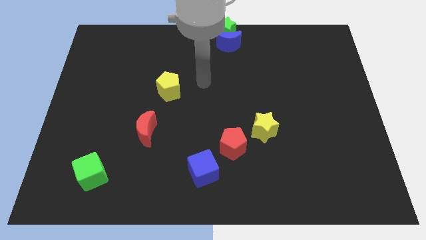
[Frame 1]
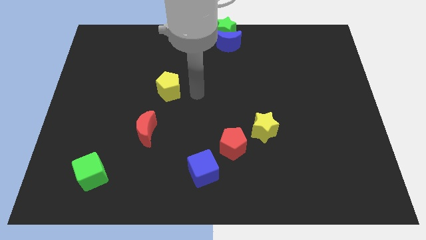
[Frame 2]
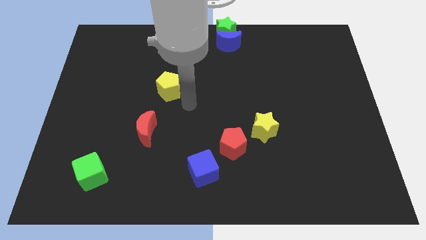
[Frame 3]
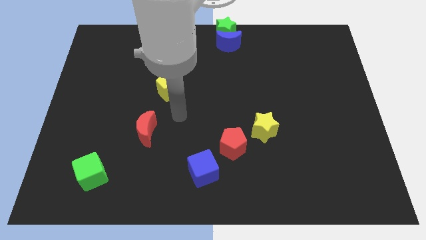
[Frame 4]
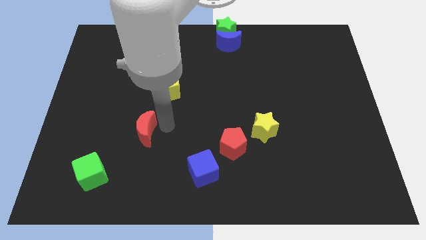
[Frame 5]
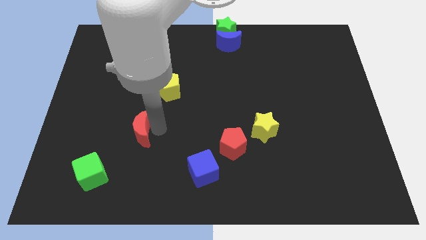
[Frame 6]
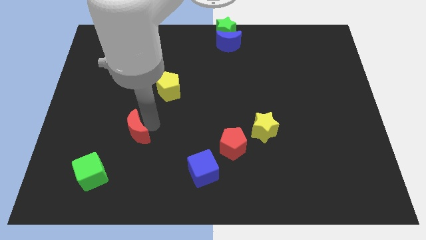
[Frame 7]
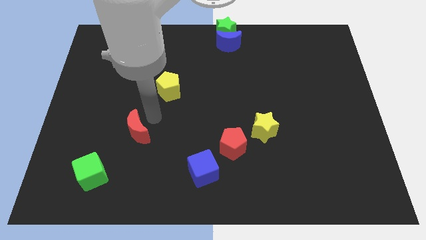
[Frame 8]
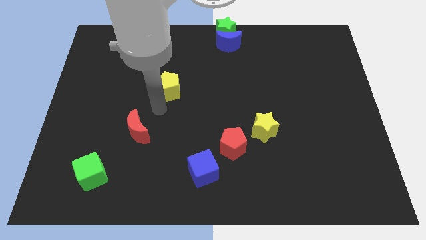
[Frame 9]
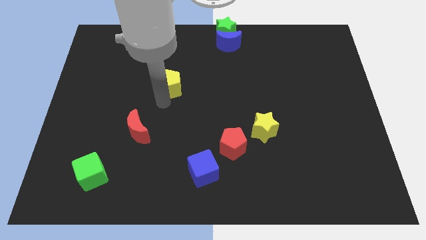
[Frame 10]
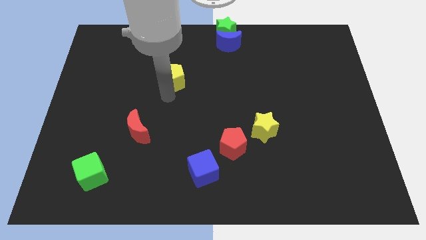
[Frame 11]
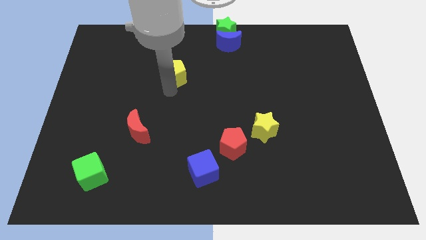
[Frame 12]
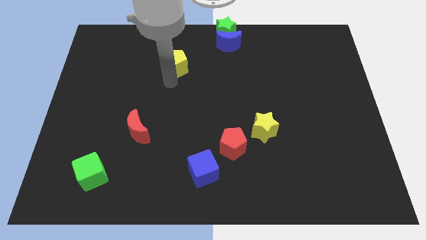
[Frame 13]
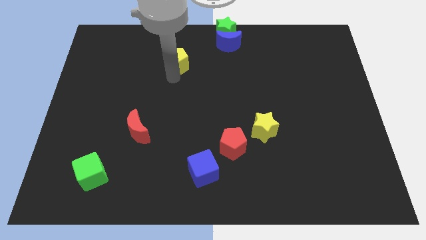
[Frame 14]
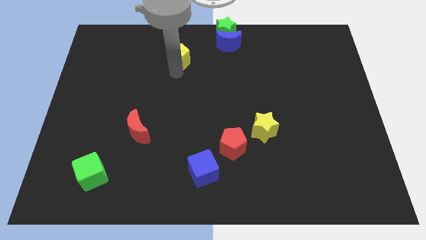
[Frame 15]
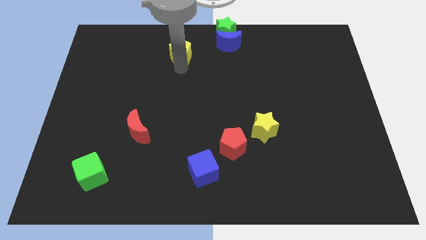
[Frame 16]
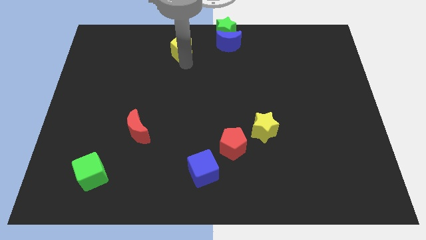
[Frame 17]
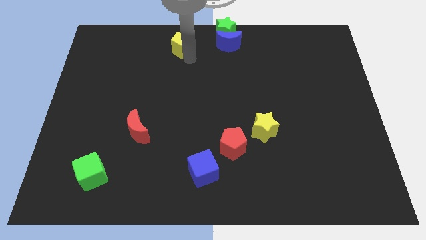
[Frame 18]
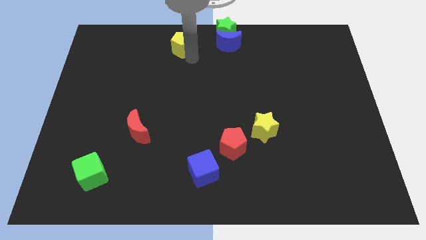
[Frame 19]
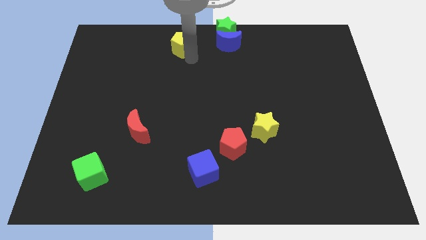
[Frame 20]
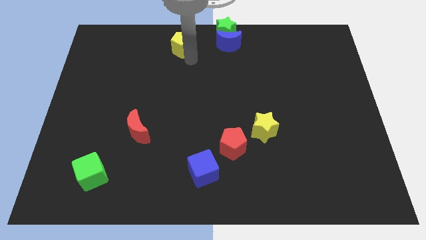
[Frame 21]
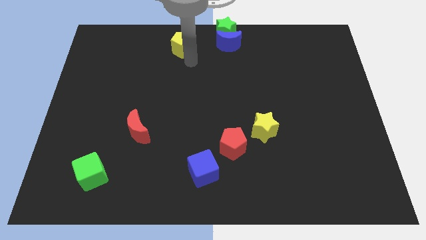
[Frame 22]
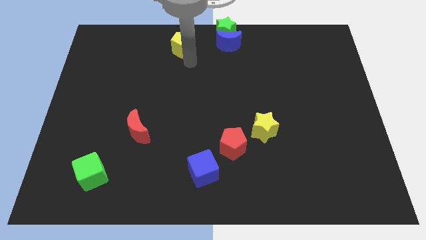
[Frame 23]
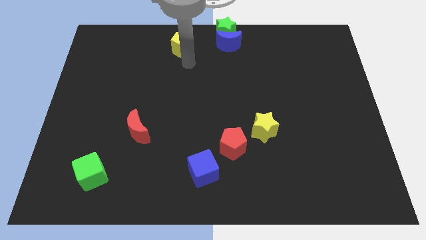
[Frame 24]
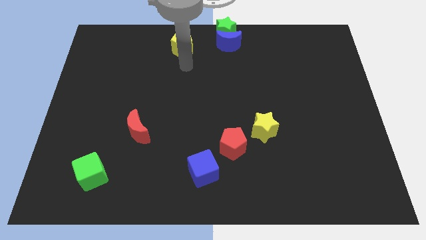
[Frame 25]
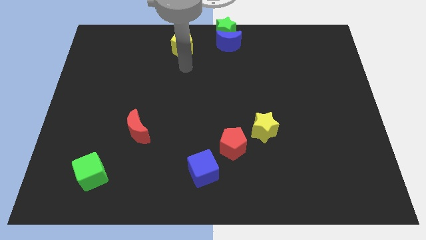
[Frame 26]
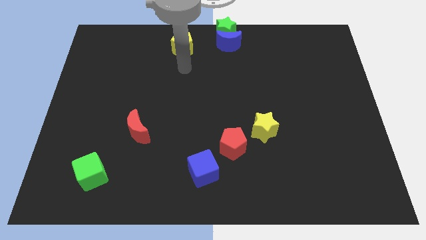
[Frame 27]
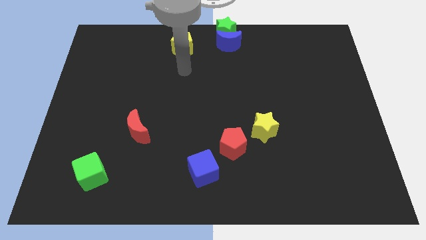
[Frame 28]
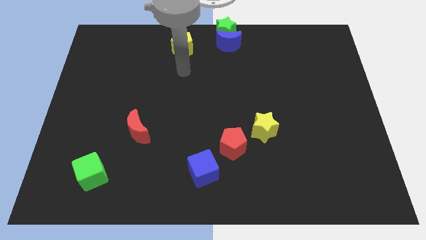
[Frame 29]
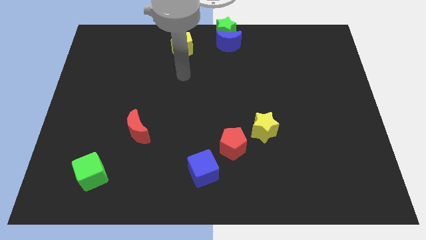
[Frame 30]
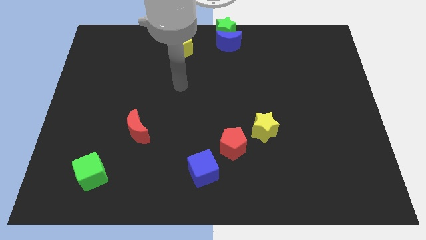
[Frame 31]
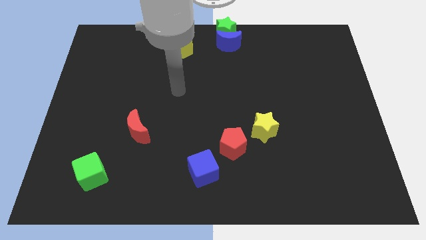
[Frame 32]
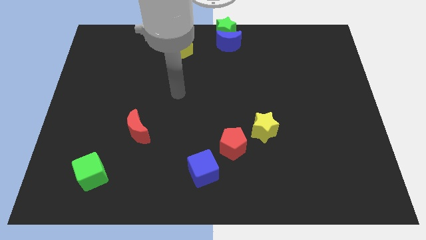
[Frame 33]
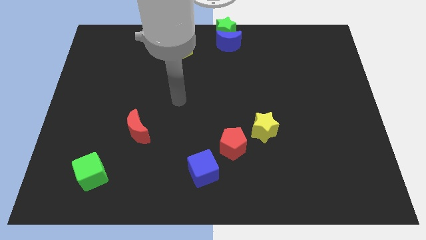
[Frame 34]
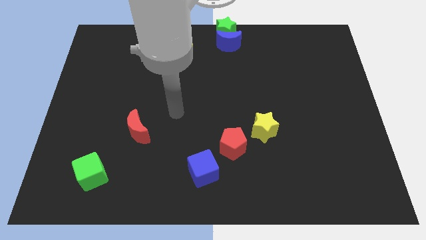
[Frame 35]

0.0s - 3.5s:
move the yellow pentagon upwards

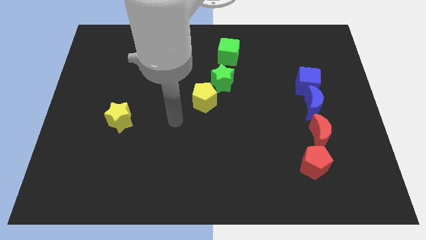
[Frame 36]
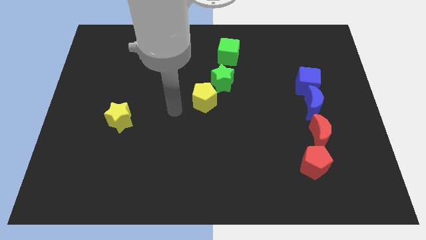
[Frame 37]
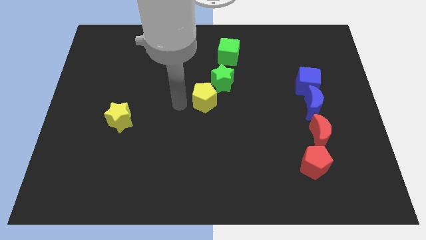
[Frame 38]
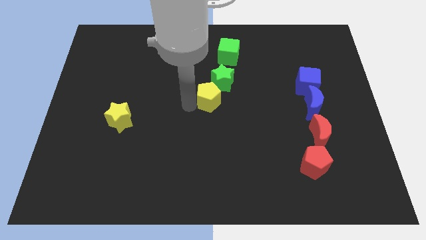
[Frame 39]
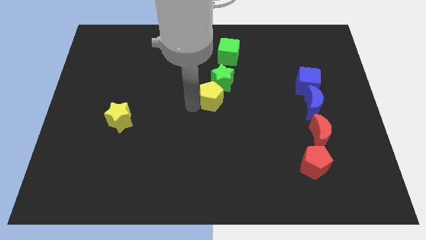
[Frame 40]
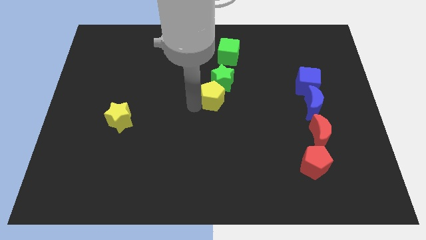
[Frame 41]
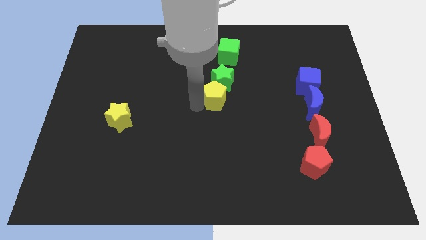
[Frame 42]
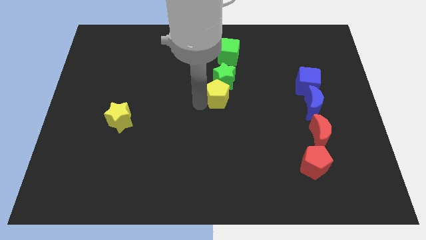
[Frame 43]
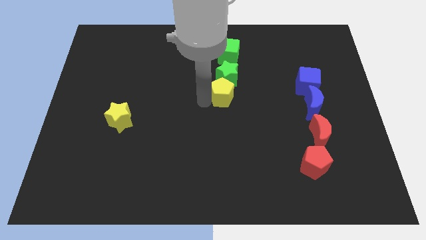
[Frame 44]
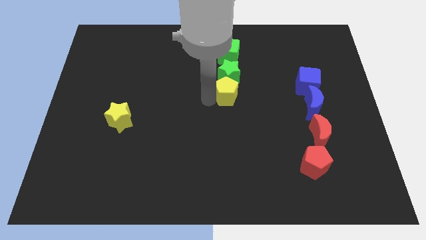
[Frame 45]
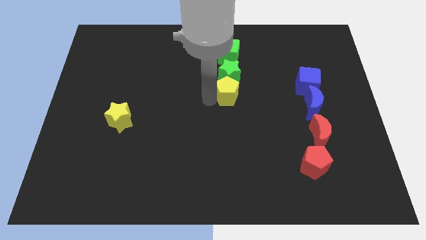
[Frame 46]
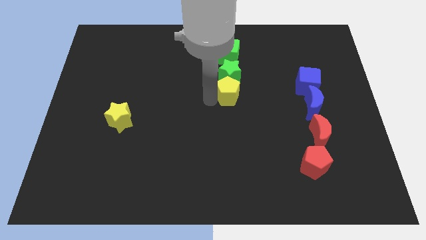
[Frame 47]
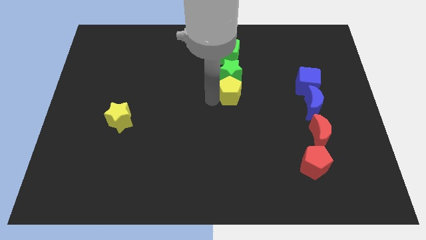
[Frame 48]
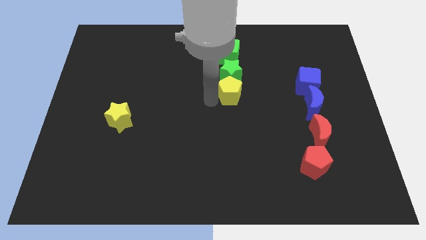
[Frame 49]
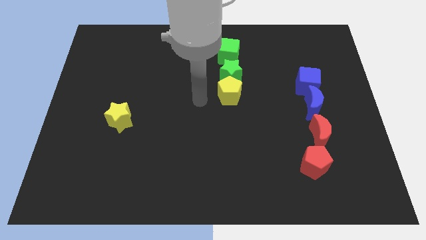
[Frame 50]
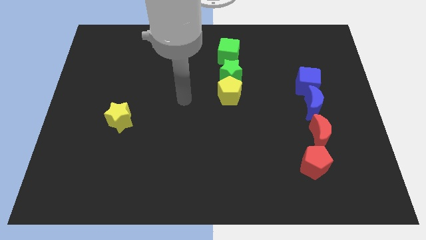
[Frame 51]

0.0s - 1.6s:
move the yellow pentagon at the bottom side of the green star

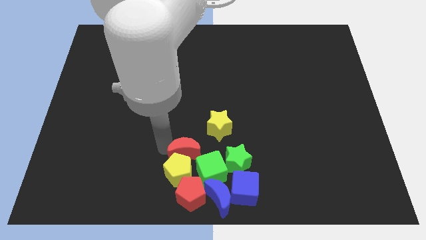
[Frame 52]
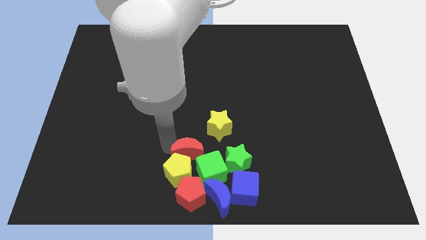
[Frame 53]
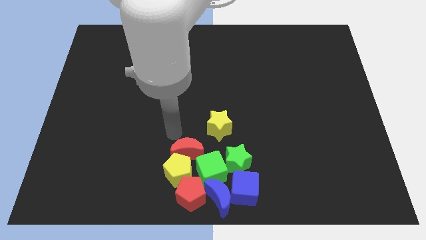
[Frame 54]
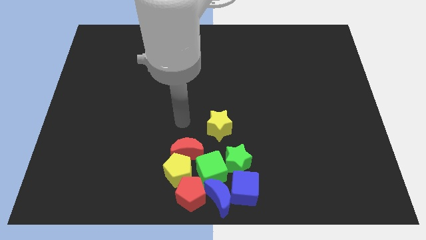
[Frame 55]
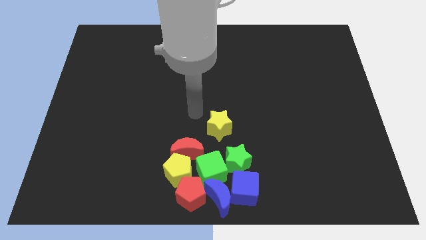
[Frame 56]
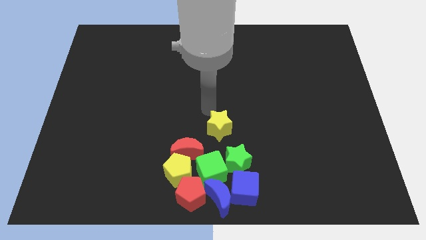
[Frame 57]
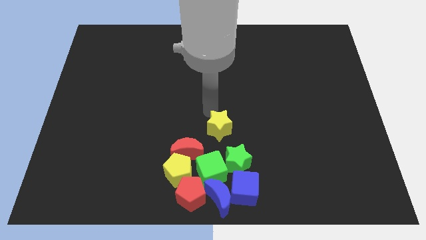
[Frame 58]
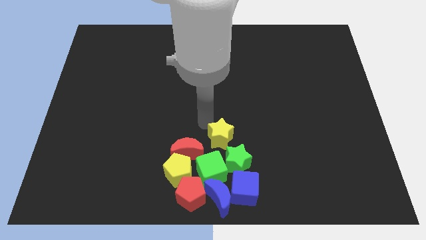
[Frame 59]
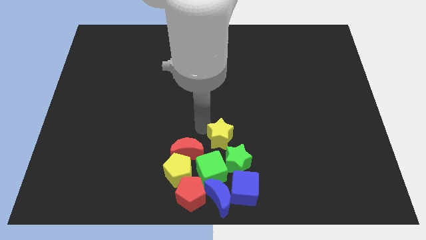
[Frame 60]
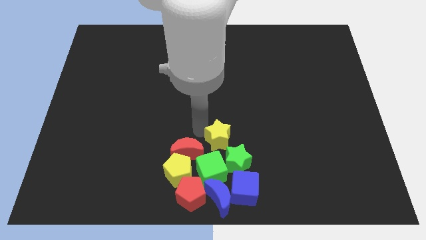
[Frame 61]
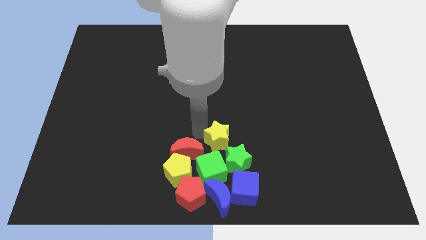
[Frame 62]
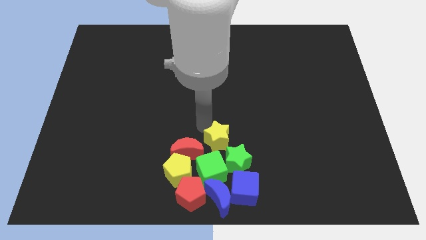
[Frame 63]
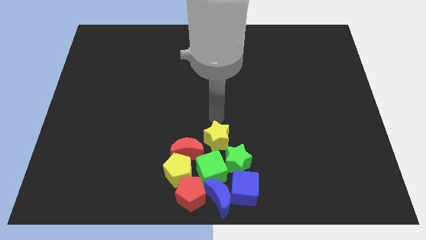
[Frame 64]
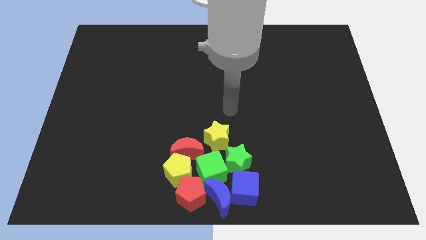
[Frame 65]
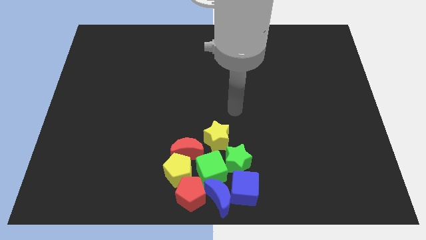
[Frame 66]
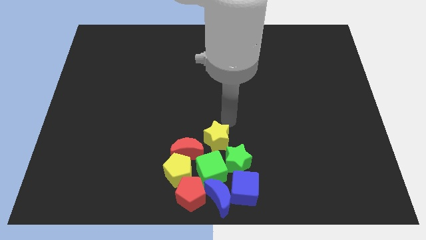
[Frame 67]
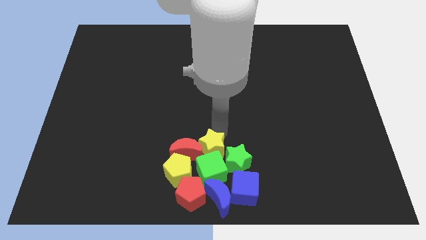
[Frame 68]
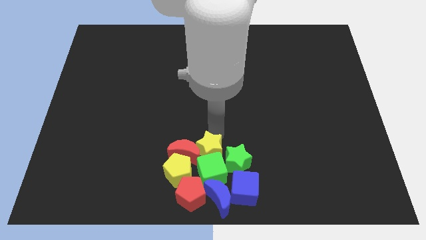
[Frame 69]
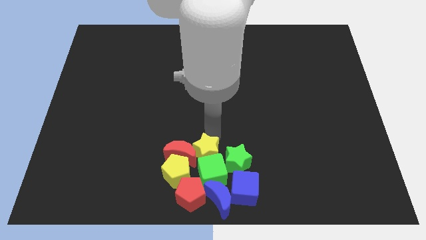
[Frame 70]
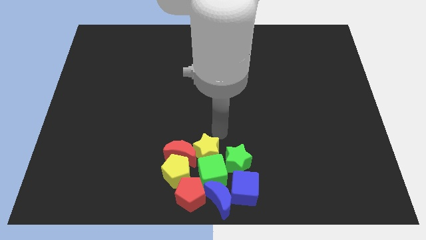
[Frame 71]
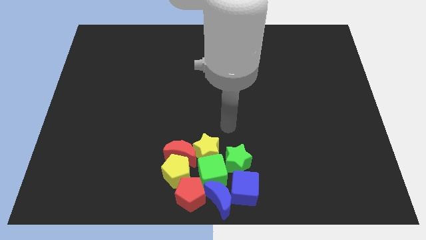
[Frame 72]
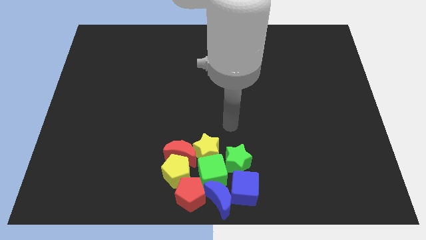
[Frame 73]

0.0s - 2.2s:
push the yellow star into the top side of the green cube

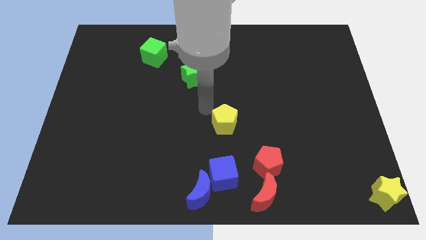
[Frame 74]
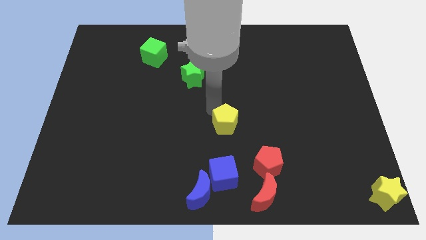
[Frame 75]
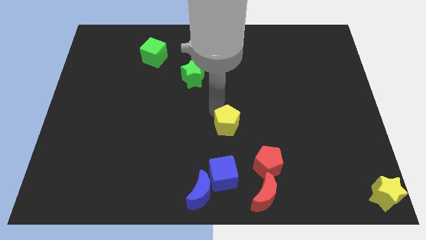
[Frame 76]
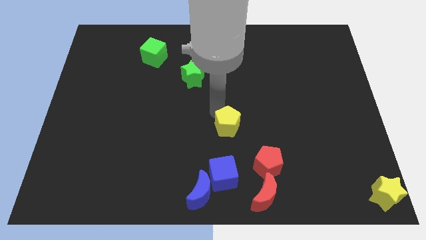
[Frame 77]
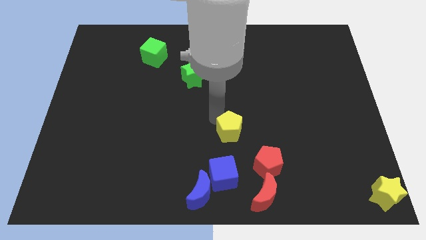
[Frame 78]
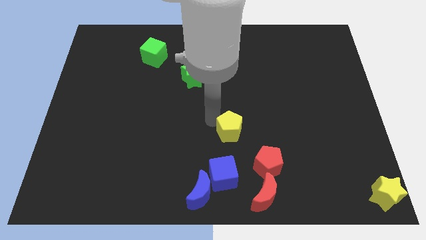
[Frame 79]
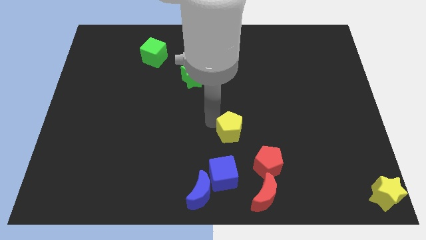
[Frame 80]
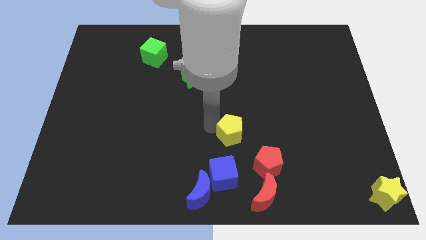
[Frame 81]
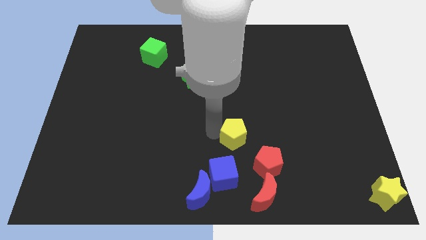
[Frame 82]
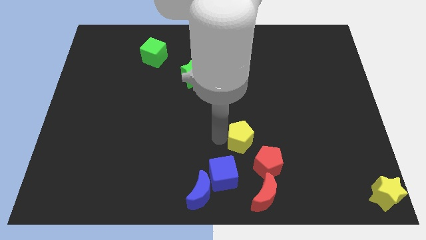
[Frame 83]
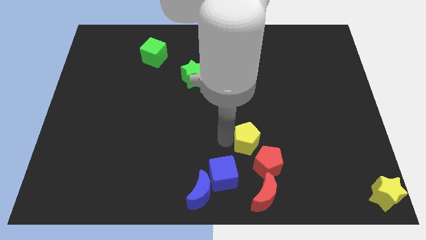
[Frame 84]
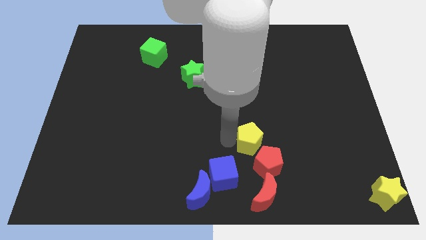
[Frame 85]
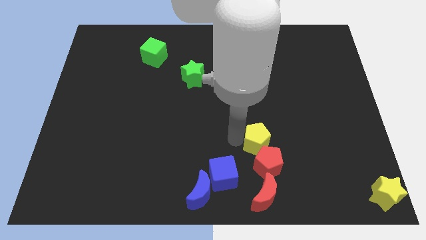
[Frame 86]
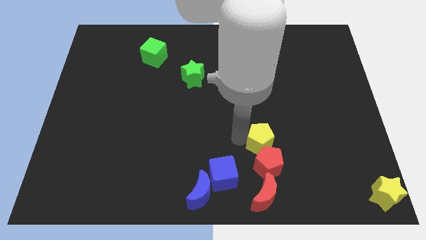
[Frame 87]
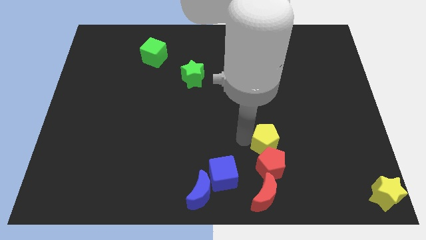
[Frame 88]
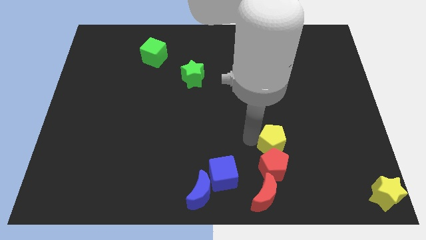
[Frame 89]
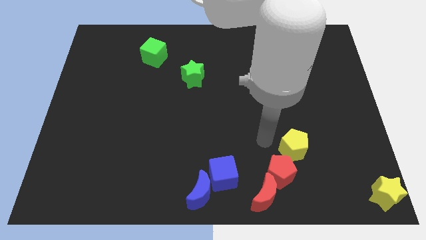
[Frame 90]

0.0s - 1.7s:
push the yellow pentagon to the top right of the red pentagon
